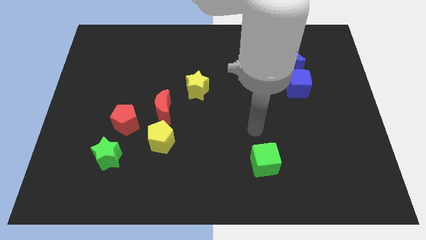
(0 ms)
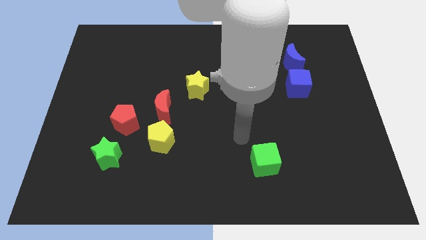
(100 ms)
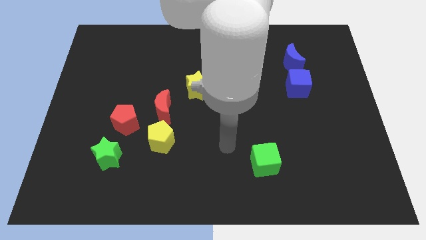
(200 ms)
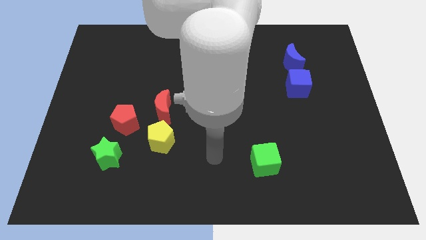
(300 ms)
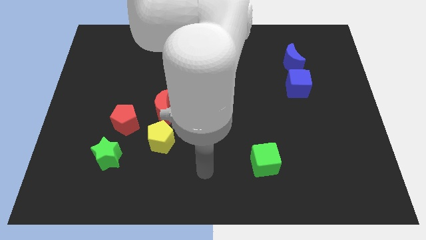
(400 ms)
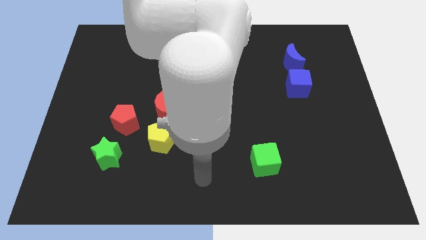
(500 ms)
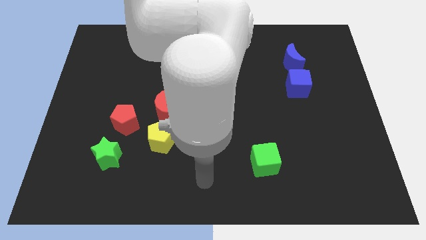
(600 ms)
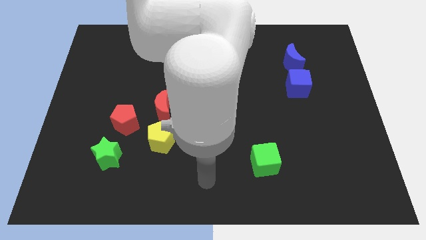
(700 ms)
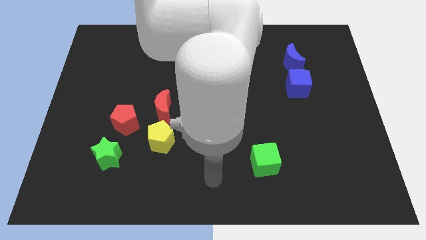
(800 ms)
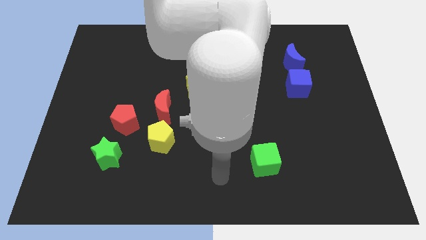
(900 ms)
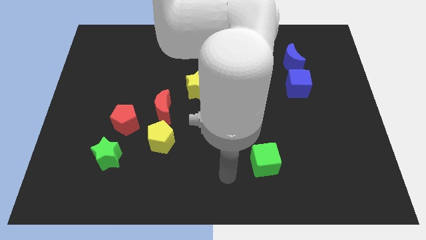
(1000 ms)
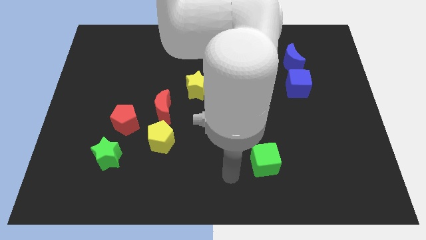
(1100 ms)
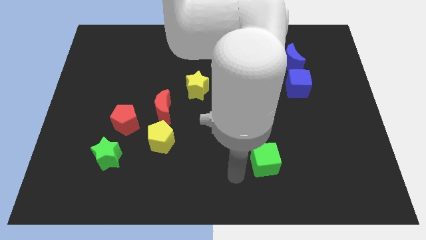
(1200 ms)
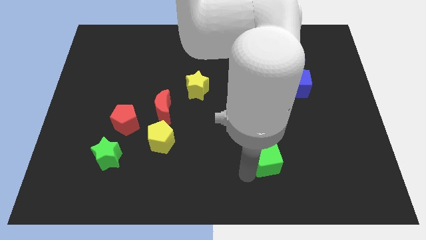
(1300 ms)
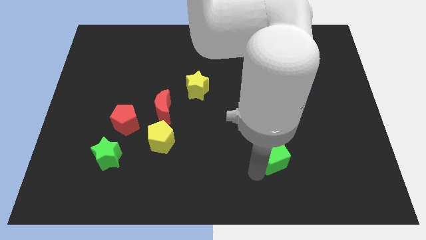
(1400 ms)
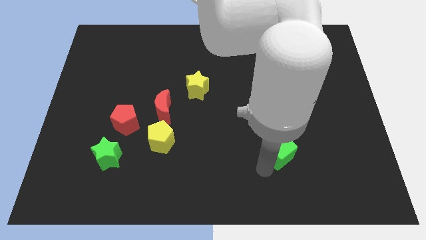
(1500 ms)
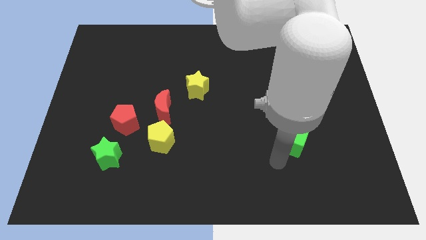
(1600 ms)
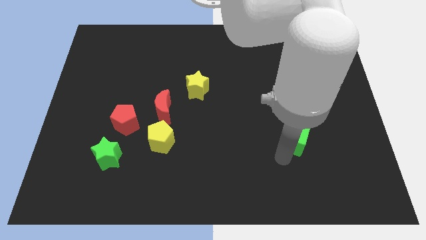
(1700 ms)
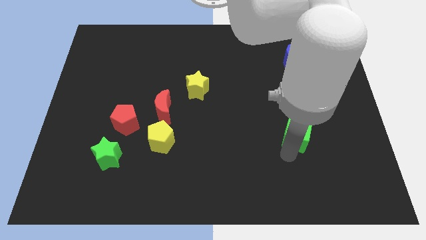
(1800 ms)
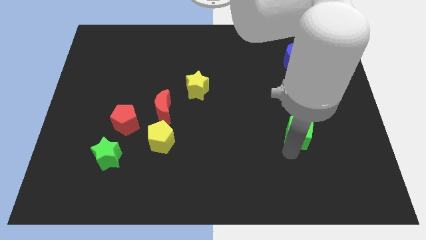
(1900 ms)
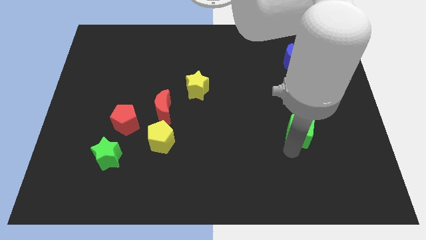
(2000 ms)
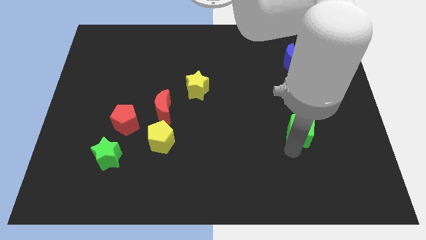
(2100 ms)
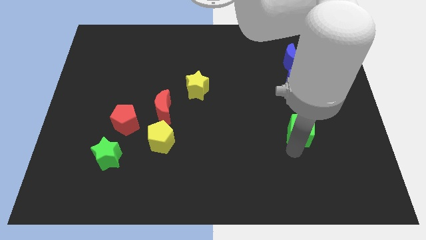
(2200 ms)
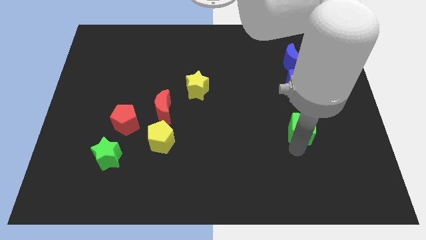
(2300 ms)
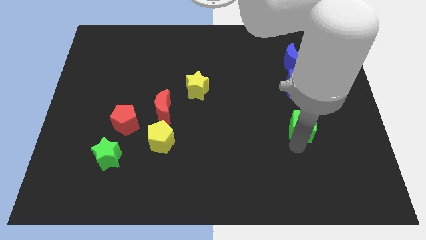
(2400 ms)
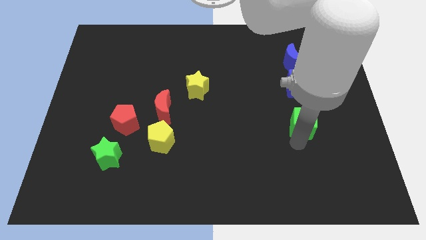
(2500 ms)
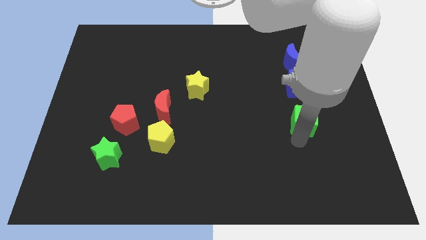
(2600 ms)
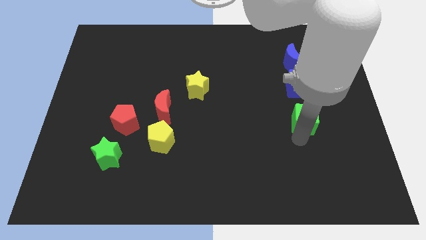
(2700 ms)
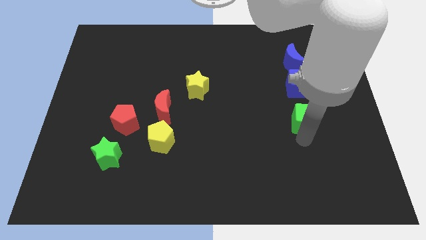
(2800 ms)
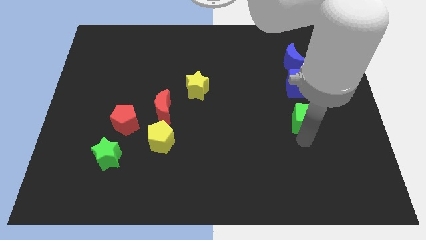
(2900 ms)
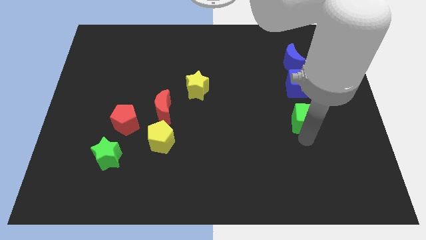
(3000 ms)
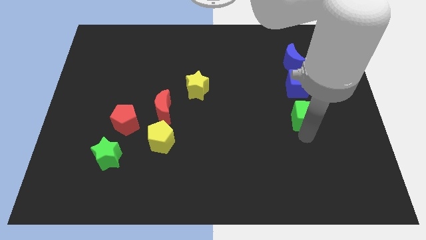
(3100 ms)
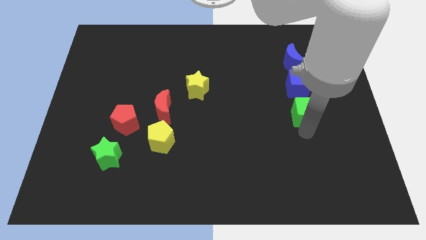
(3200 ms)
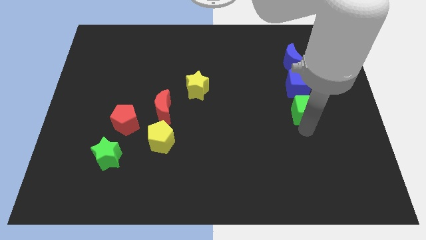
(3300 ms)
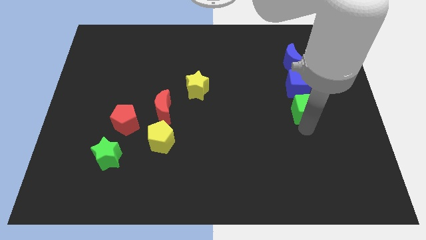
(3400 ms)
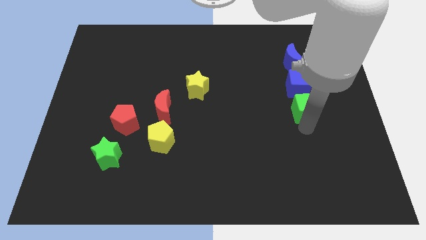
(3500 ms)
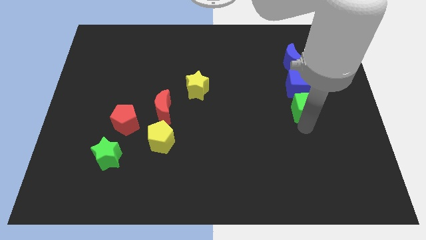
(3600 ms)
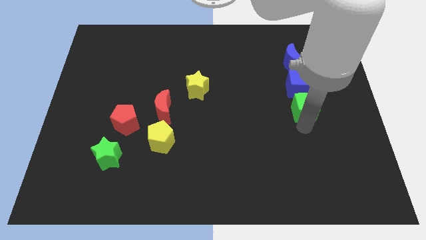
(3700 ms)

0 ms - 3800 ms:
move the green cube to the bottom side of the blue cube

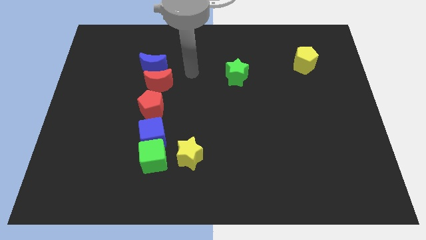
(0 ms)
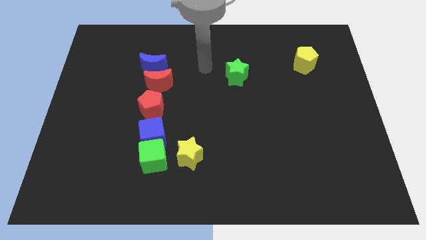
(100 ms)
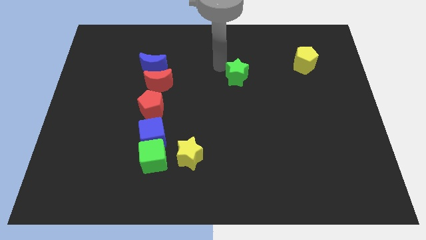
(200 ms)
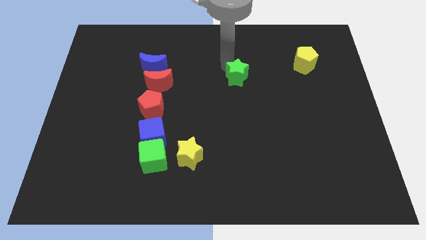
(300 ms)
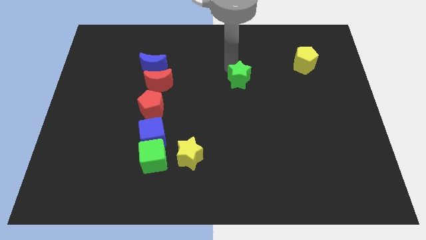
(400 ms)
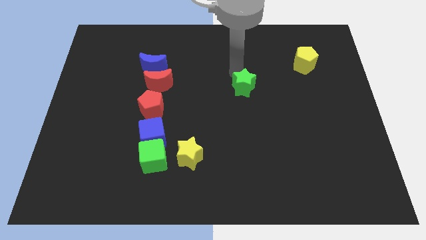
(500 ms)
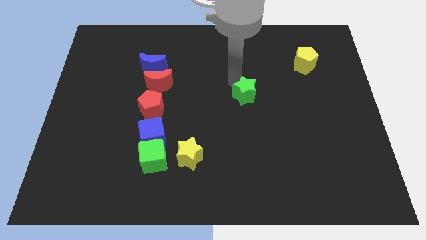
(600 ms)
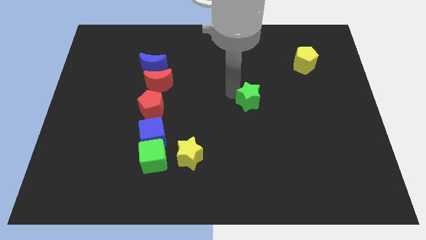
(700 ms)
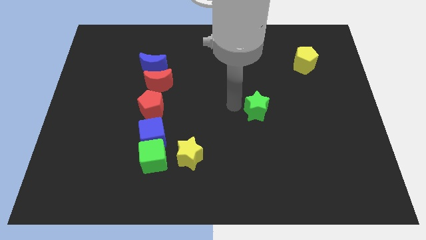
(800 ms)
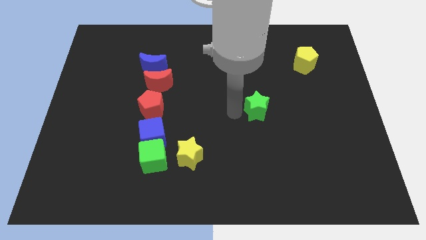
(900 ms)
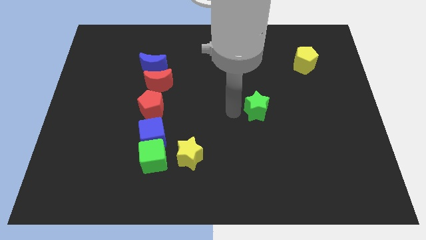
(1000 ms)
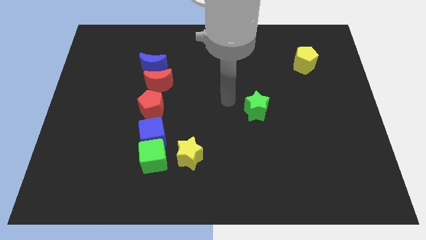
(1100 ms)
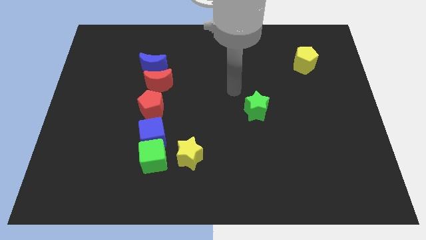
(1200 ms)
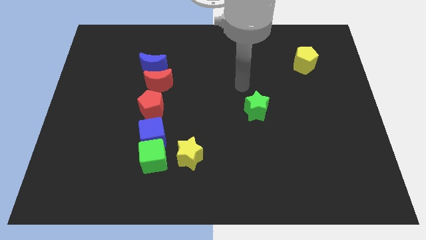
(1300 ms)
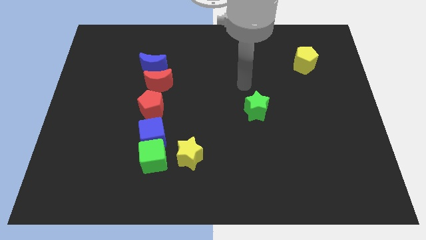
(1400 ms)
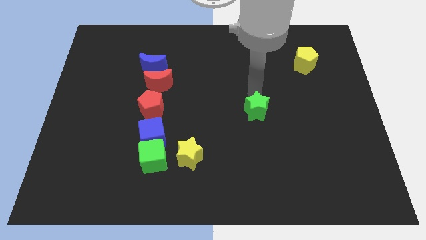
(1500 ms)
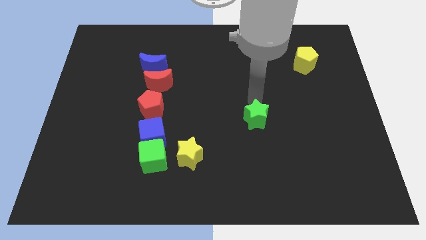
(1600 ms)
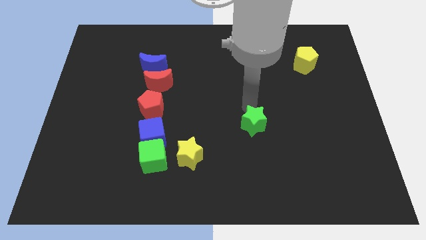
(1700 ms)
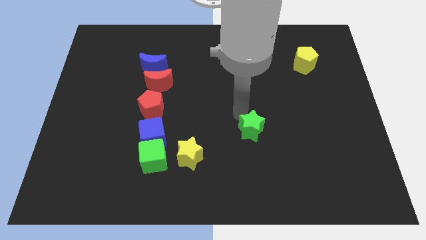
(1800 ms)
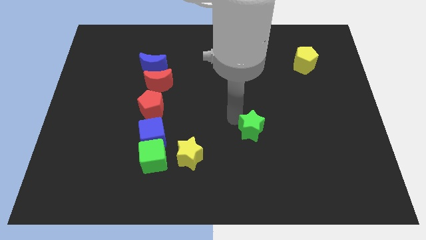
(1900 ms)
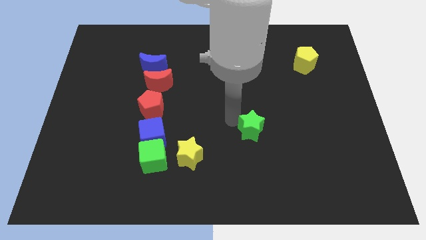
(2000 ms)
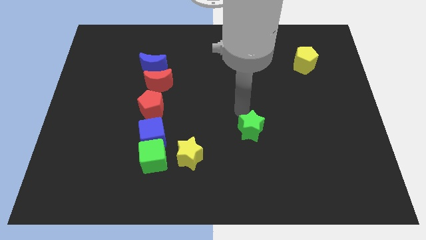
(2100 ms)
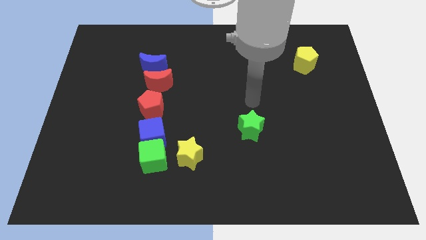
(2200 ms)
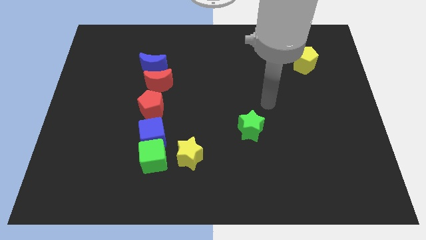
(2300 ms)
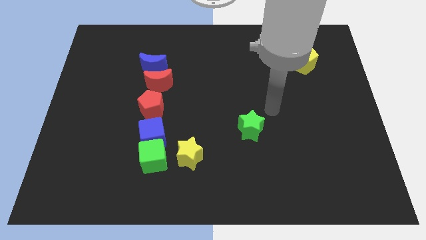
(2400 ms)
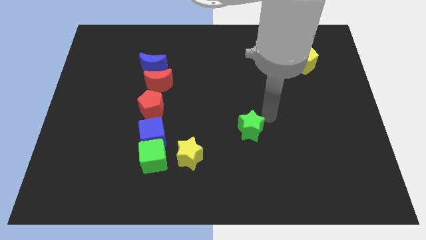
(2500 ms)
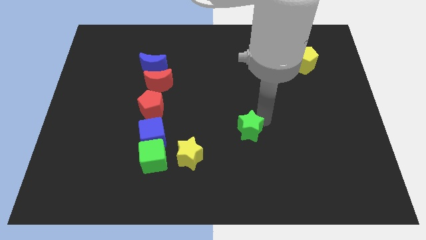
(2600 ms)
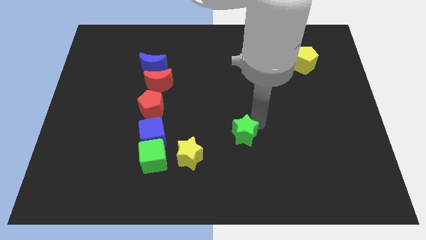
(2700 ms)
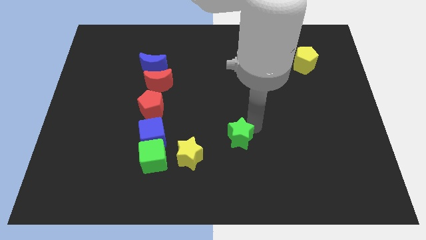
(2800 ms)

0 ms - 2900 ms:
move the green star diagonally to the top right of the yellow star

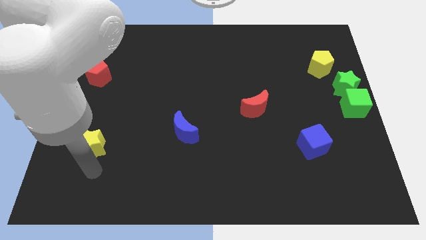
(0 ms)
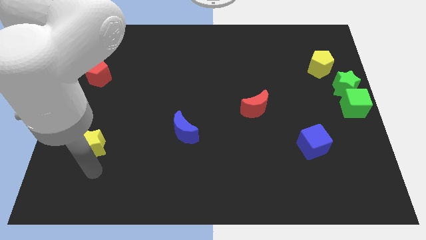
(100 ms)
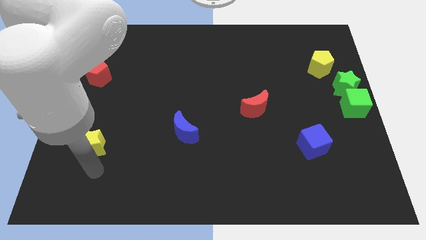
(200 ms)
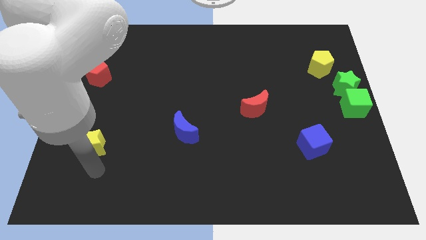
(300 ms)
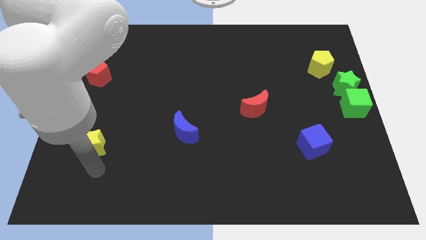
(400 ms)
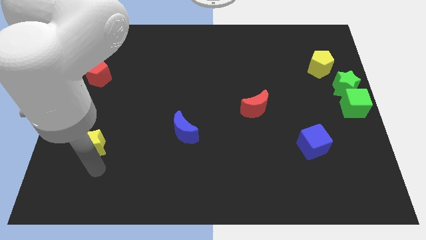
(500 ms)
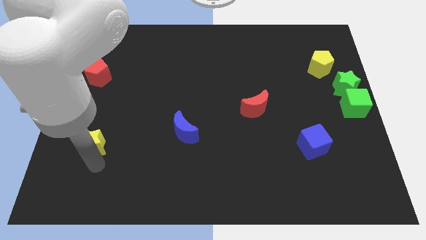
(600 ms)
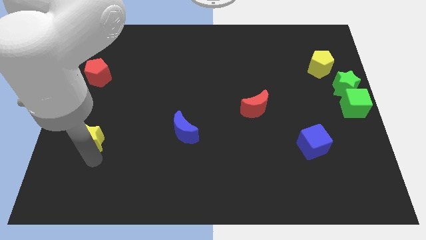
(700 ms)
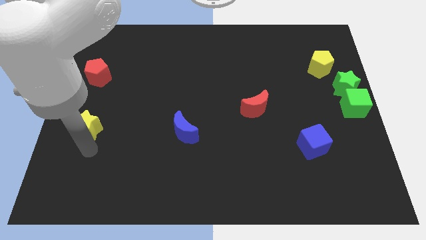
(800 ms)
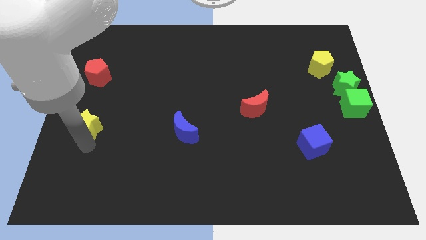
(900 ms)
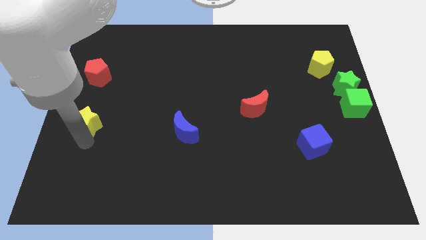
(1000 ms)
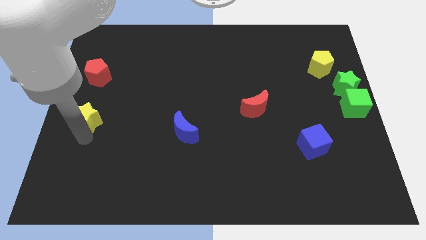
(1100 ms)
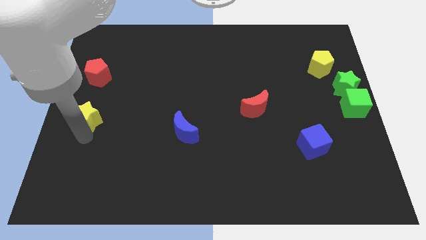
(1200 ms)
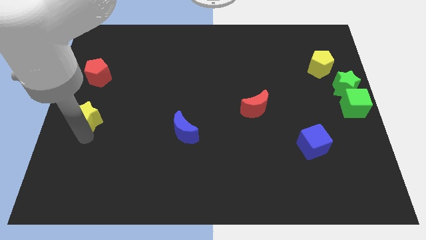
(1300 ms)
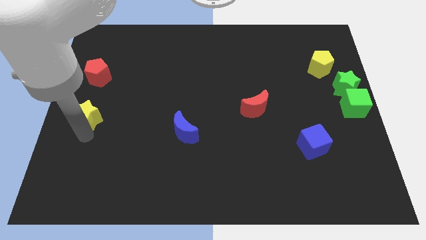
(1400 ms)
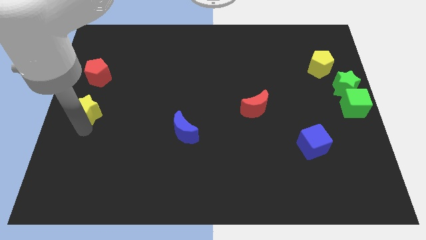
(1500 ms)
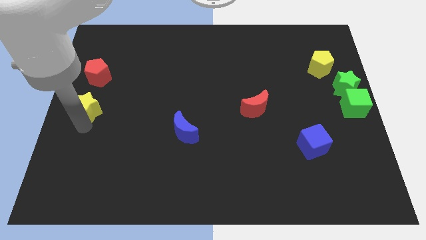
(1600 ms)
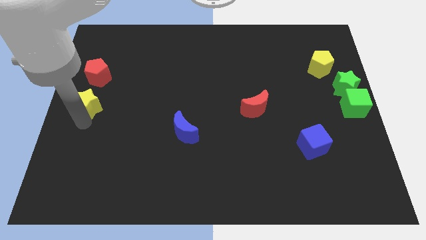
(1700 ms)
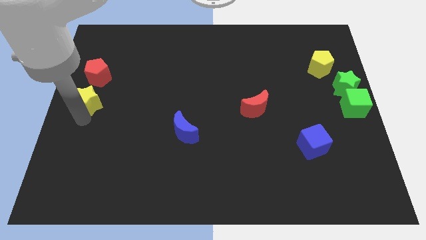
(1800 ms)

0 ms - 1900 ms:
slide the yellow star slightly towards up

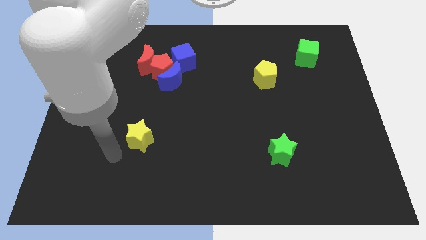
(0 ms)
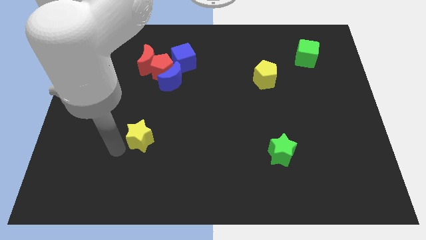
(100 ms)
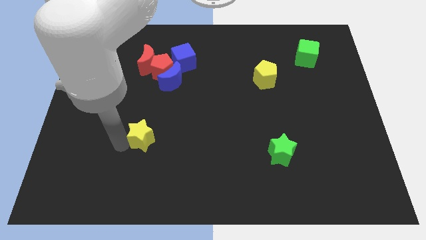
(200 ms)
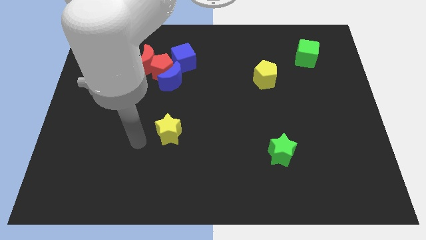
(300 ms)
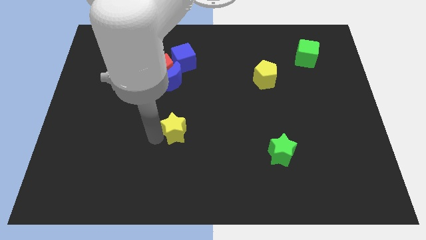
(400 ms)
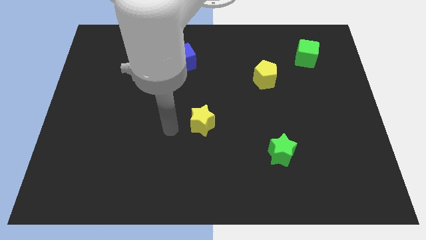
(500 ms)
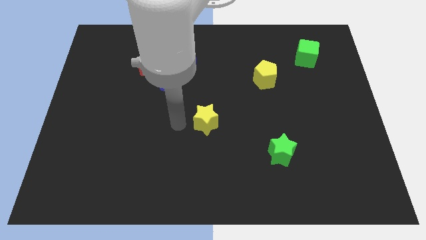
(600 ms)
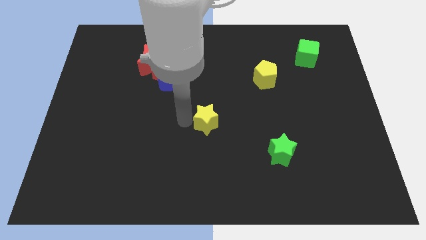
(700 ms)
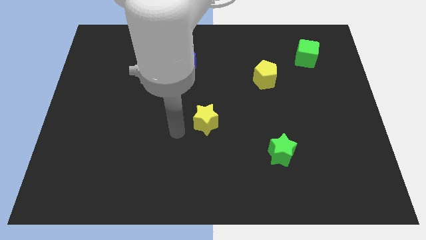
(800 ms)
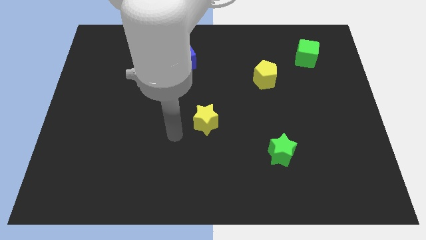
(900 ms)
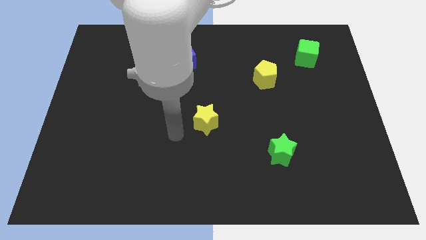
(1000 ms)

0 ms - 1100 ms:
move the yellow star to the center of the board
